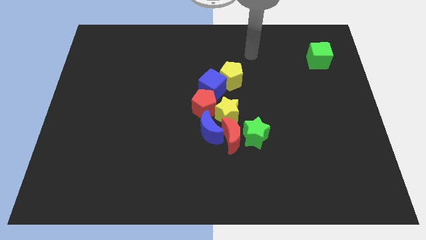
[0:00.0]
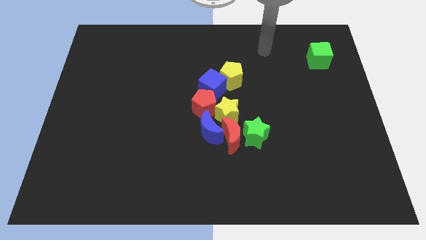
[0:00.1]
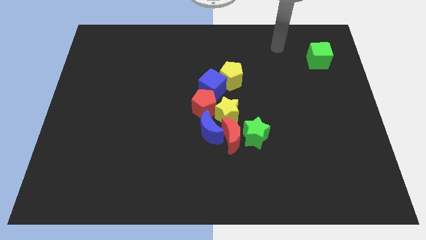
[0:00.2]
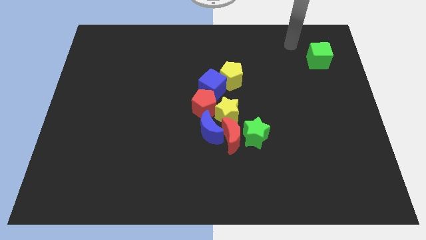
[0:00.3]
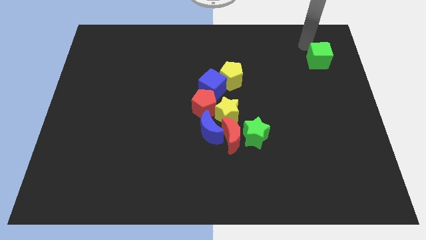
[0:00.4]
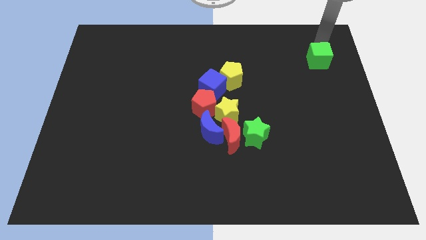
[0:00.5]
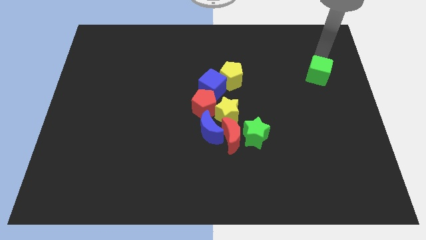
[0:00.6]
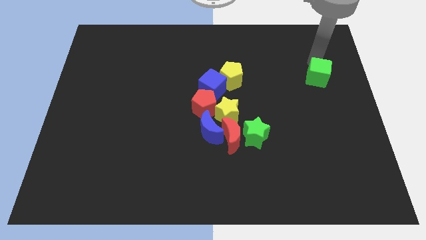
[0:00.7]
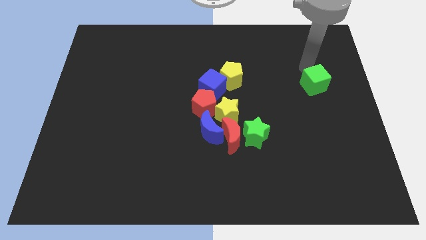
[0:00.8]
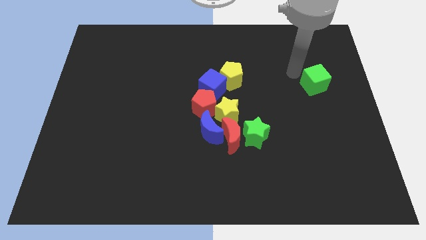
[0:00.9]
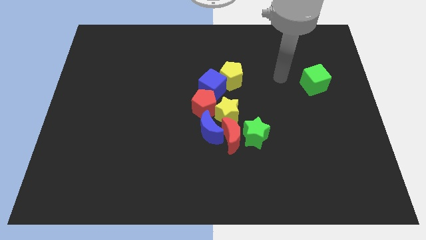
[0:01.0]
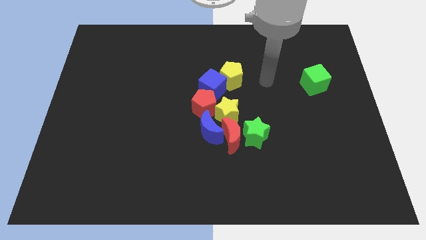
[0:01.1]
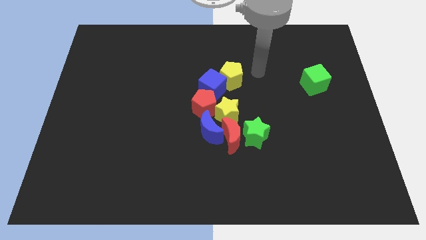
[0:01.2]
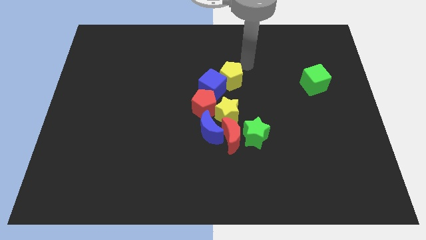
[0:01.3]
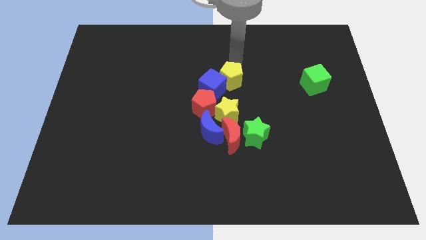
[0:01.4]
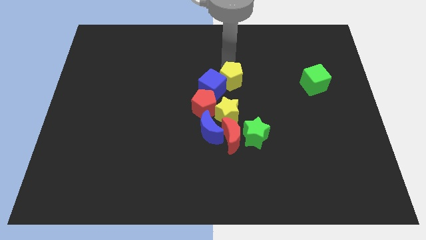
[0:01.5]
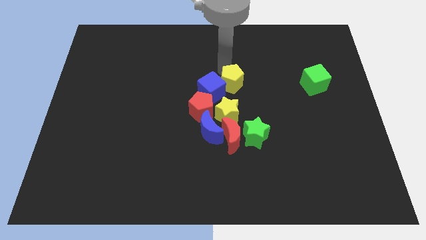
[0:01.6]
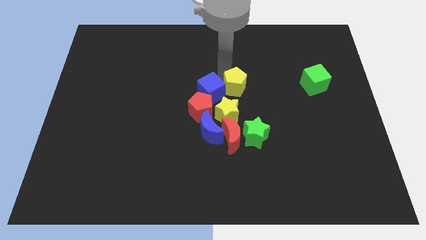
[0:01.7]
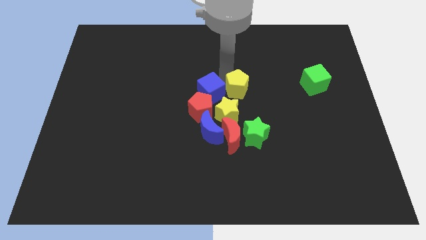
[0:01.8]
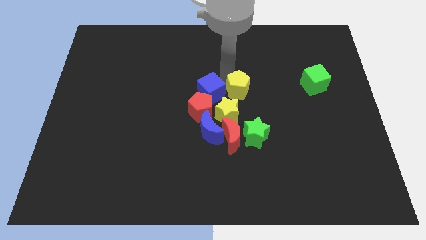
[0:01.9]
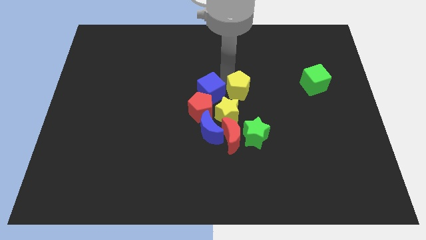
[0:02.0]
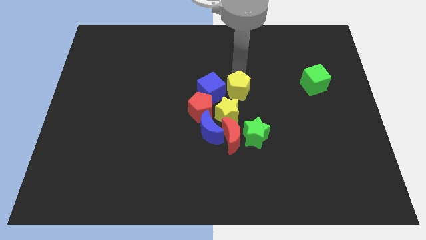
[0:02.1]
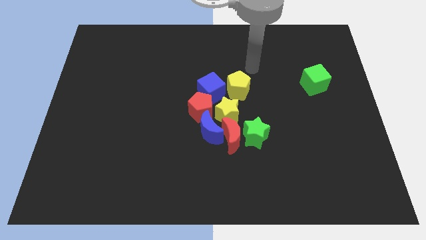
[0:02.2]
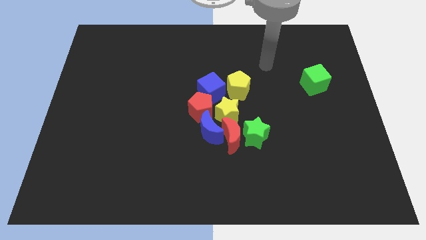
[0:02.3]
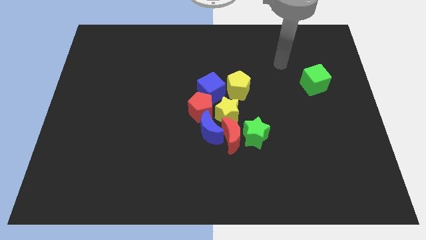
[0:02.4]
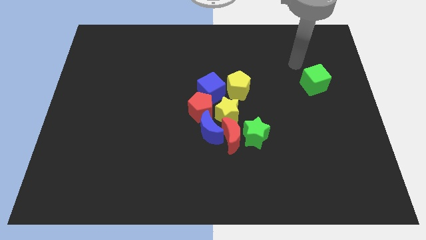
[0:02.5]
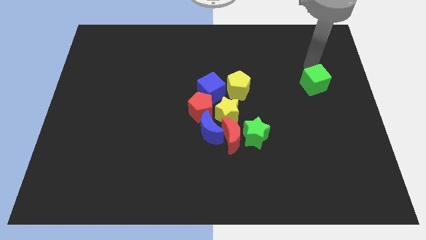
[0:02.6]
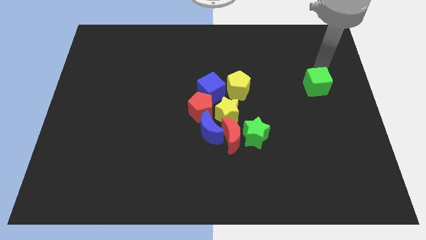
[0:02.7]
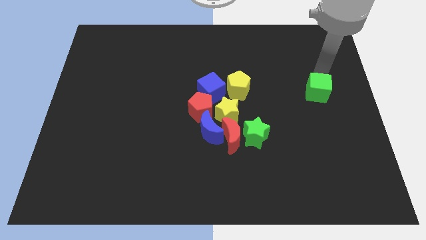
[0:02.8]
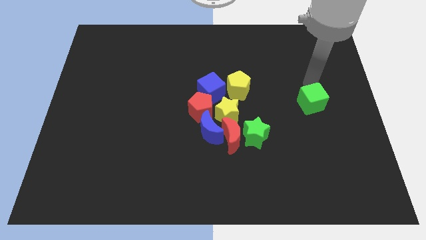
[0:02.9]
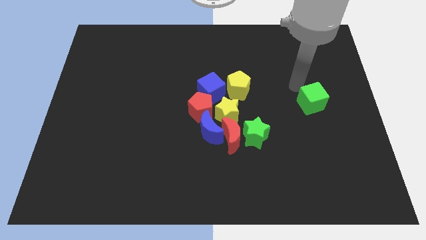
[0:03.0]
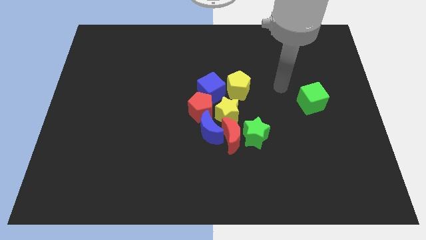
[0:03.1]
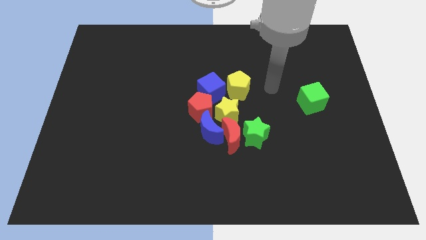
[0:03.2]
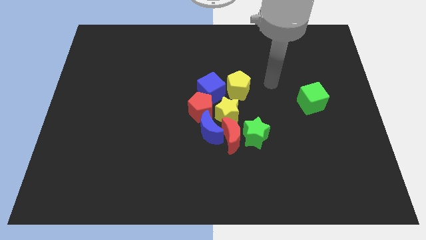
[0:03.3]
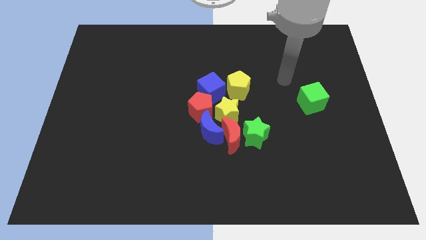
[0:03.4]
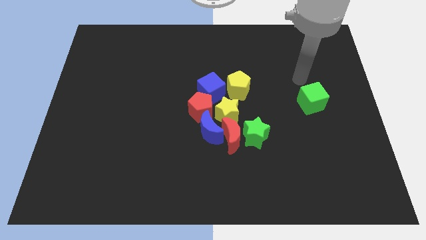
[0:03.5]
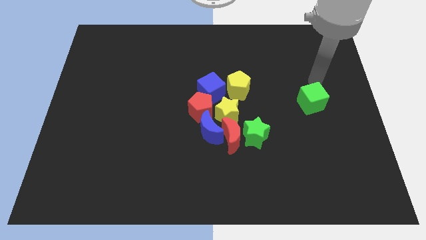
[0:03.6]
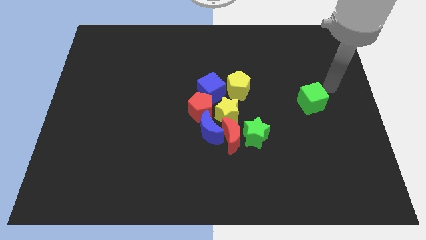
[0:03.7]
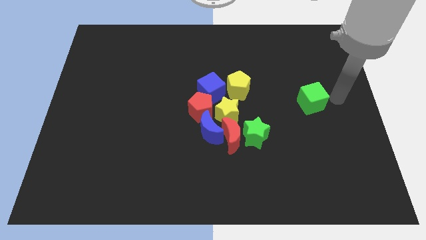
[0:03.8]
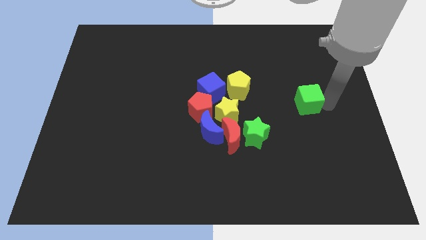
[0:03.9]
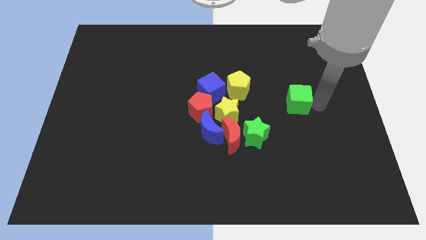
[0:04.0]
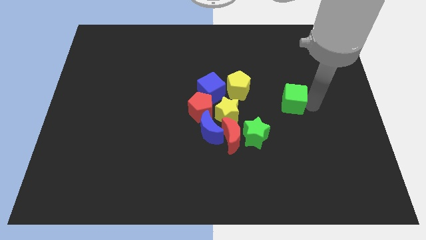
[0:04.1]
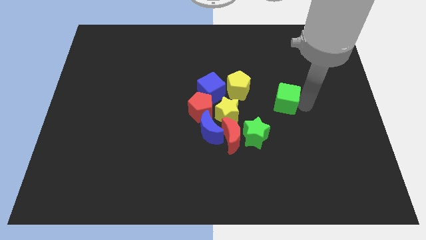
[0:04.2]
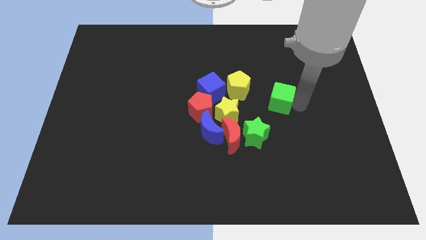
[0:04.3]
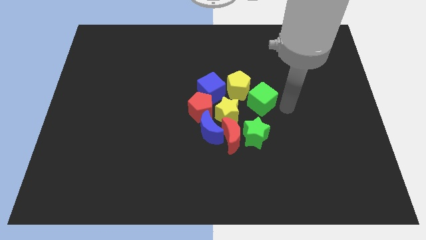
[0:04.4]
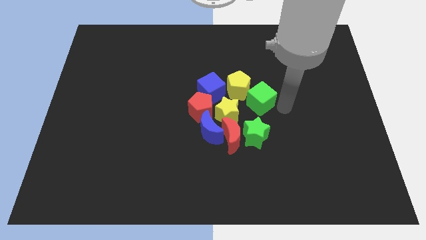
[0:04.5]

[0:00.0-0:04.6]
place the green cube below the yellow pentagon diagonally

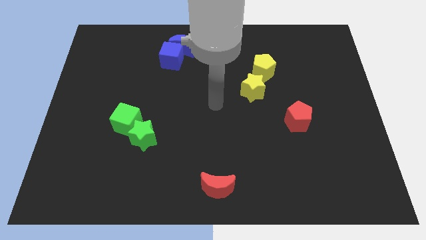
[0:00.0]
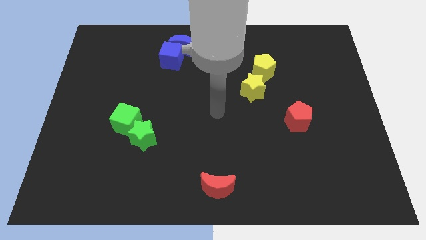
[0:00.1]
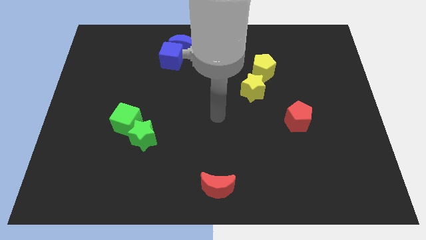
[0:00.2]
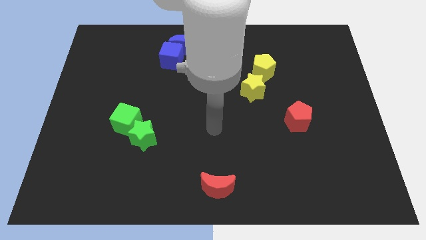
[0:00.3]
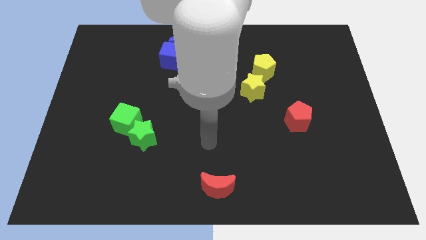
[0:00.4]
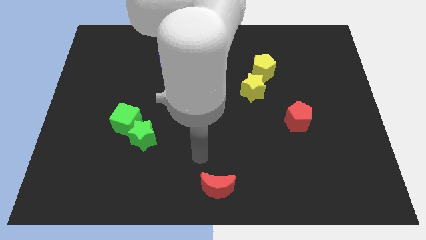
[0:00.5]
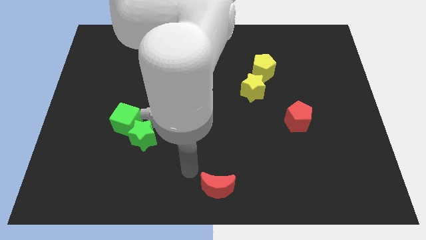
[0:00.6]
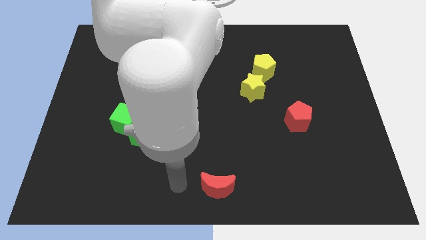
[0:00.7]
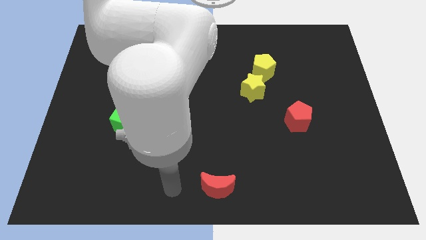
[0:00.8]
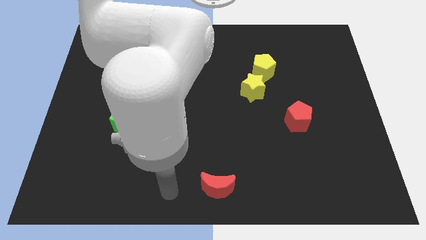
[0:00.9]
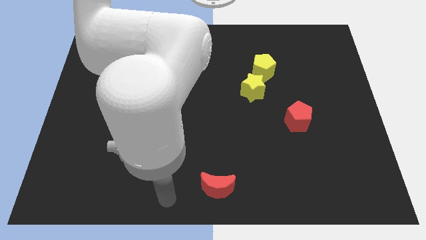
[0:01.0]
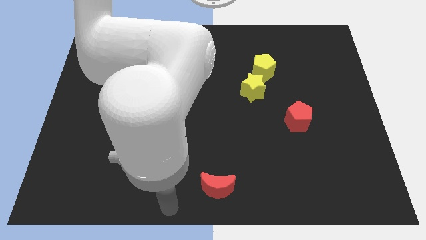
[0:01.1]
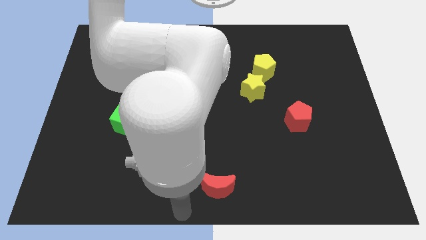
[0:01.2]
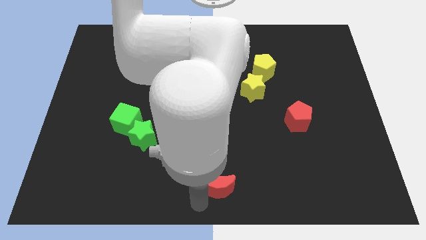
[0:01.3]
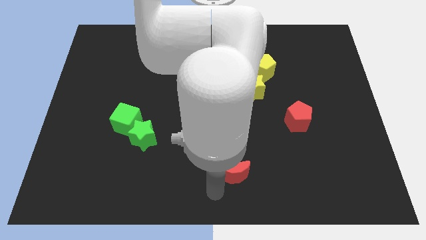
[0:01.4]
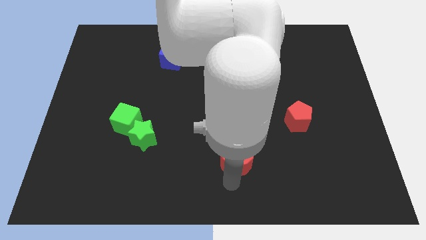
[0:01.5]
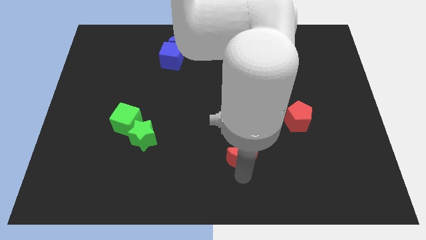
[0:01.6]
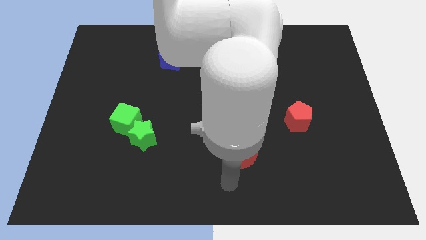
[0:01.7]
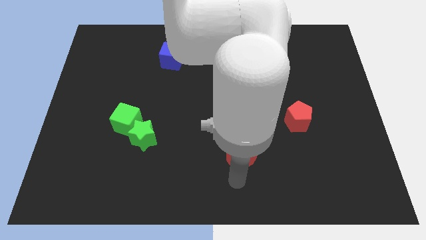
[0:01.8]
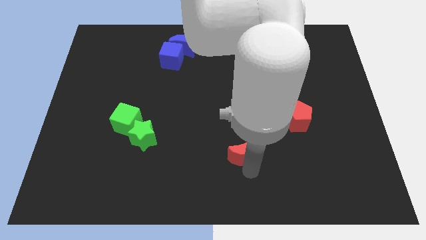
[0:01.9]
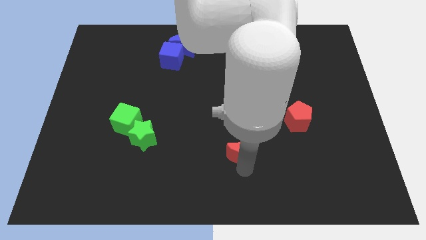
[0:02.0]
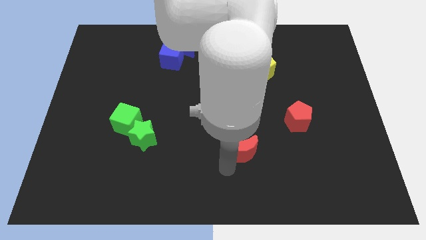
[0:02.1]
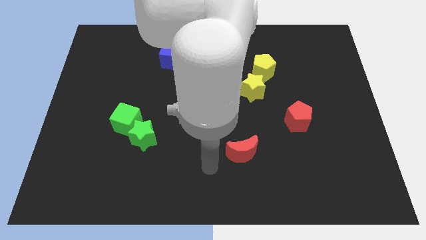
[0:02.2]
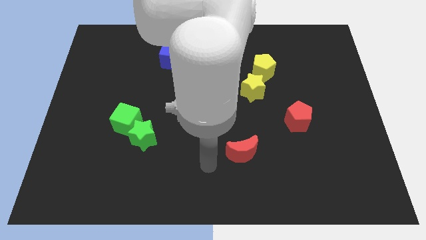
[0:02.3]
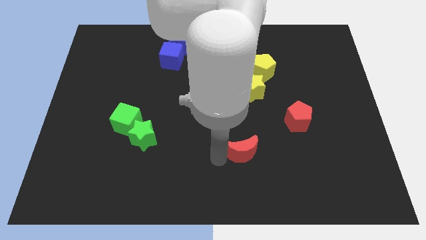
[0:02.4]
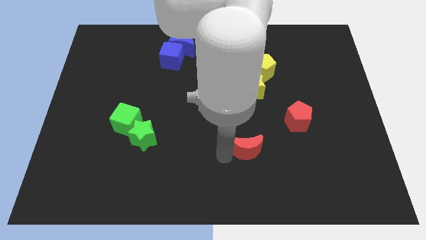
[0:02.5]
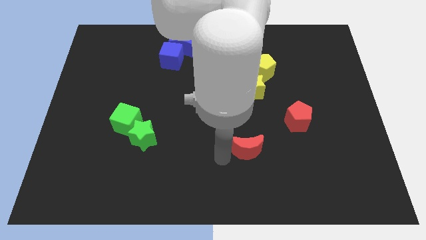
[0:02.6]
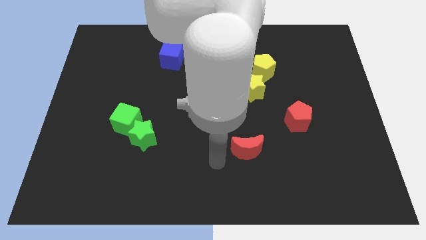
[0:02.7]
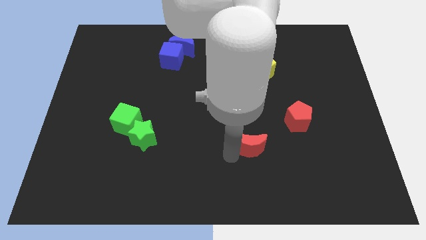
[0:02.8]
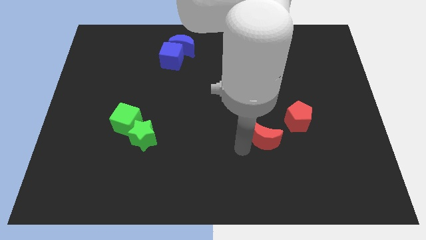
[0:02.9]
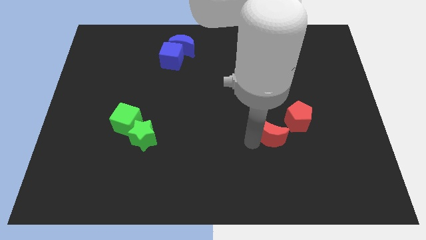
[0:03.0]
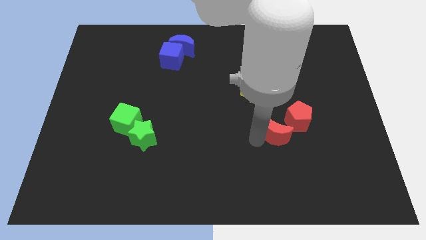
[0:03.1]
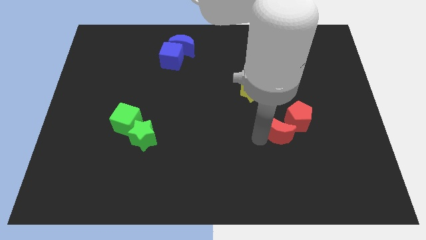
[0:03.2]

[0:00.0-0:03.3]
put the red crescent to the right of the green star

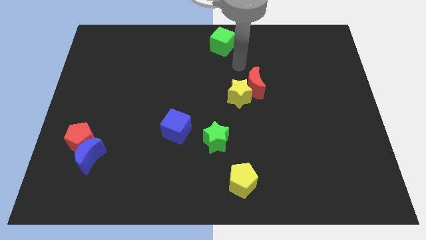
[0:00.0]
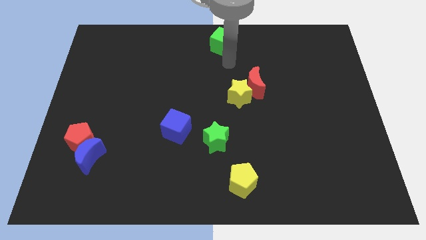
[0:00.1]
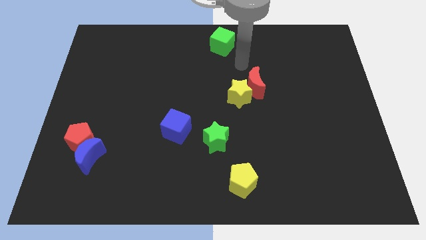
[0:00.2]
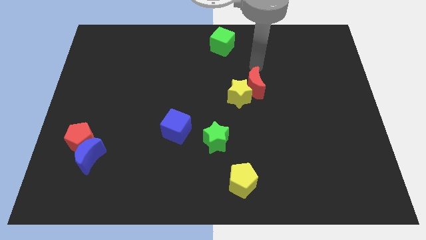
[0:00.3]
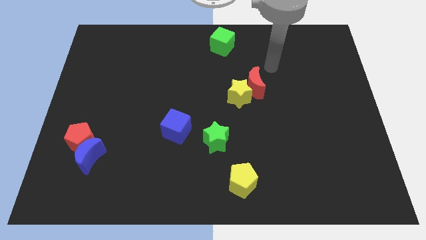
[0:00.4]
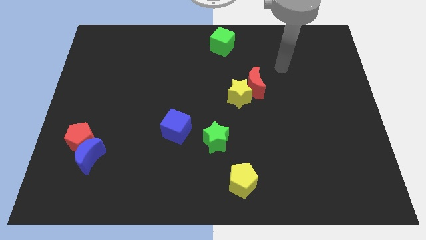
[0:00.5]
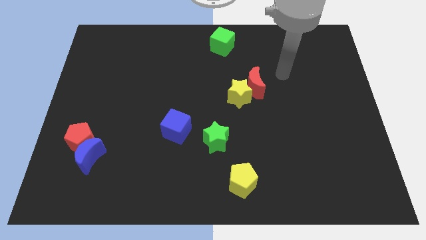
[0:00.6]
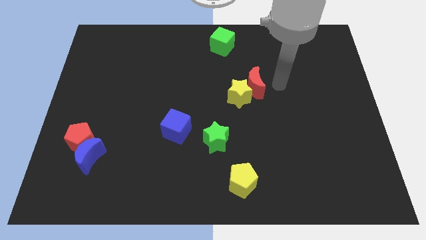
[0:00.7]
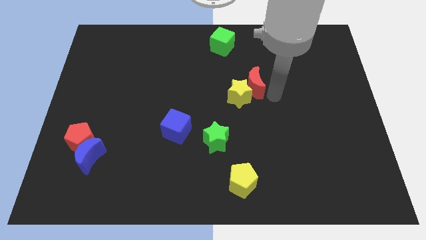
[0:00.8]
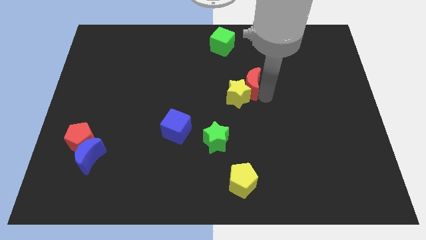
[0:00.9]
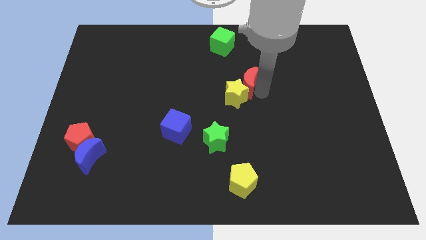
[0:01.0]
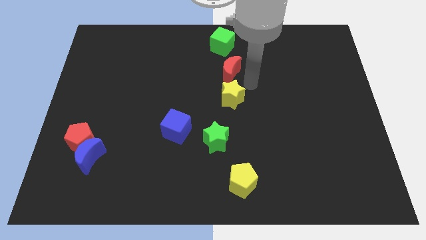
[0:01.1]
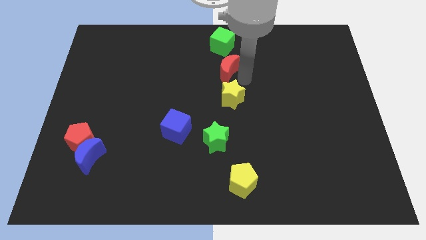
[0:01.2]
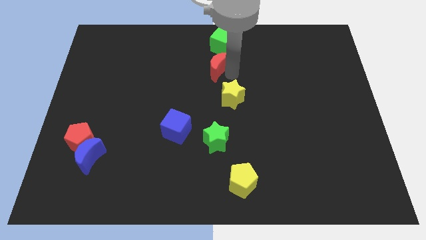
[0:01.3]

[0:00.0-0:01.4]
separate the red crescent away from the yellow star
